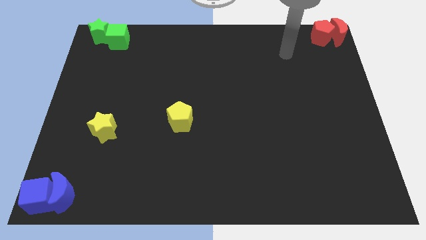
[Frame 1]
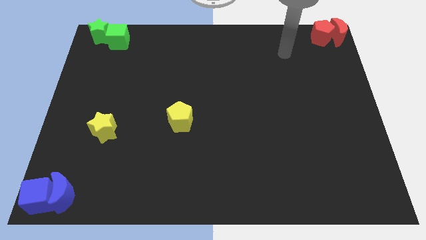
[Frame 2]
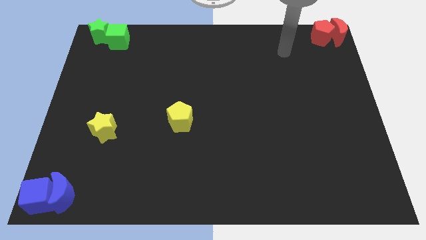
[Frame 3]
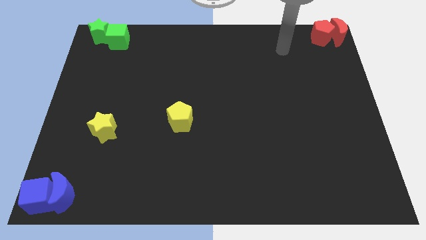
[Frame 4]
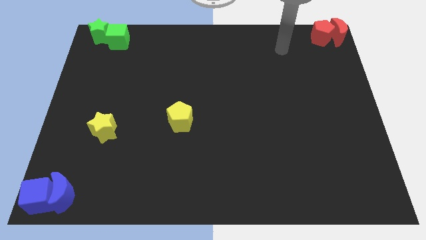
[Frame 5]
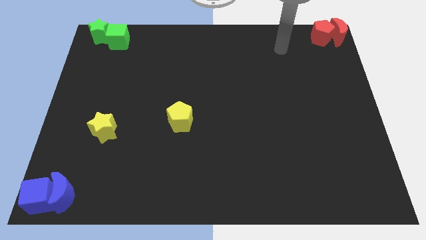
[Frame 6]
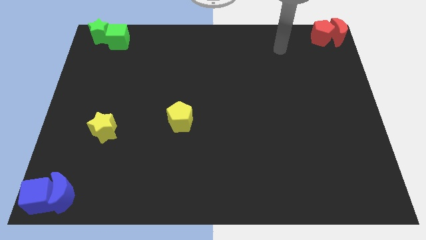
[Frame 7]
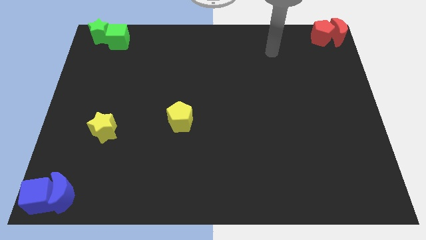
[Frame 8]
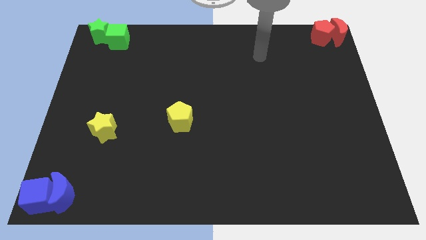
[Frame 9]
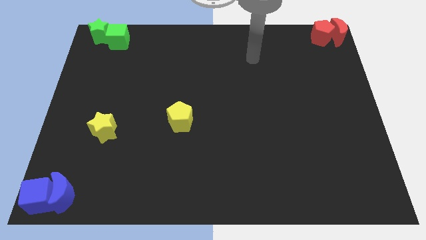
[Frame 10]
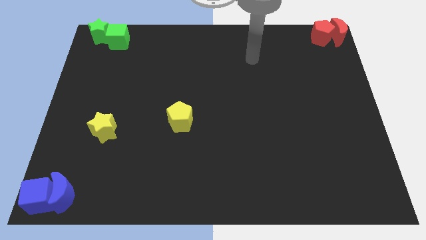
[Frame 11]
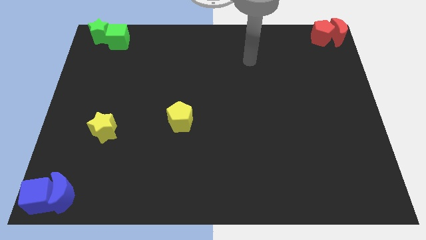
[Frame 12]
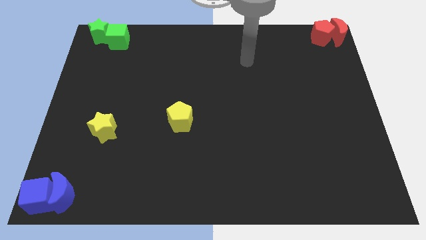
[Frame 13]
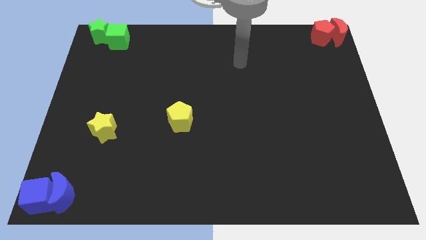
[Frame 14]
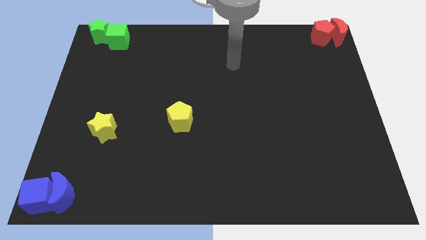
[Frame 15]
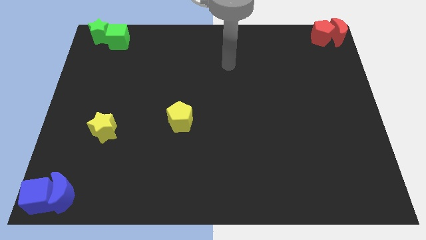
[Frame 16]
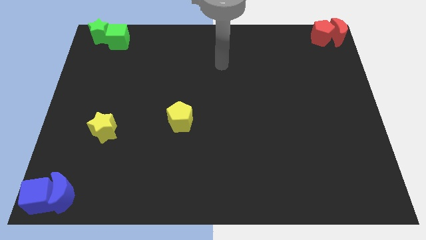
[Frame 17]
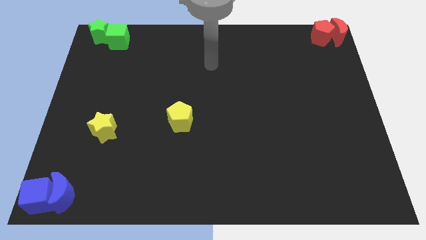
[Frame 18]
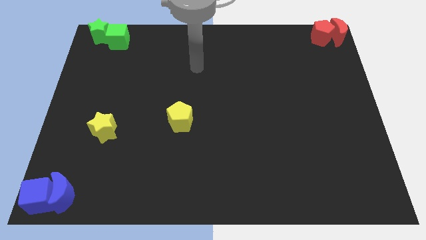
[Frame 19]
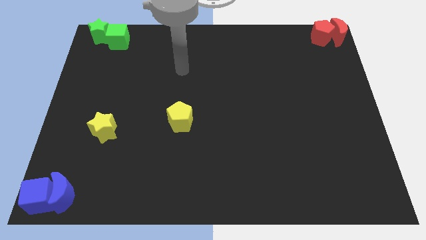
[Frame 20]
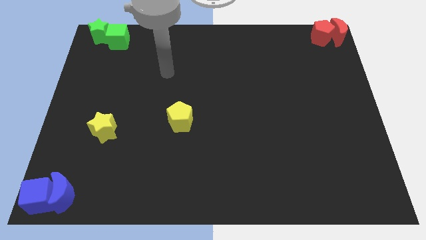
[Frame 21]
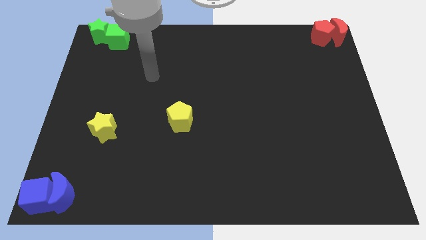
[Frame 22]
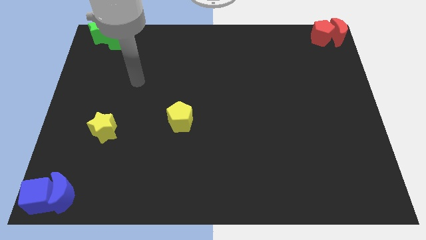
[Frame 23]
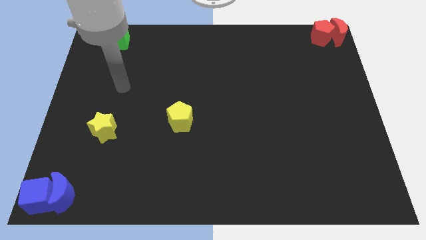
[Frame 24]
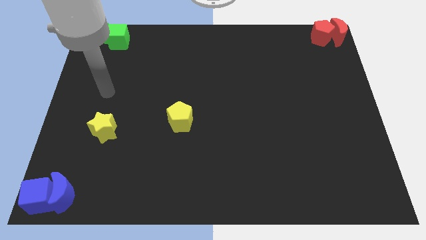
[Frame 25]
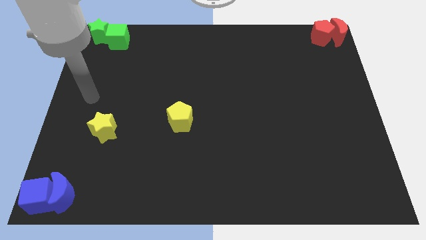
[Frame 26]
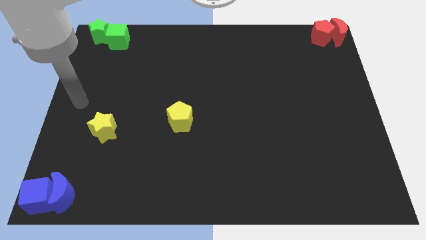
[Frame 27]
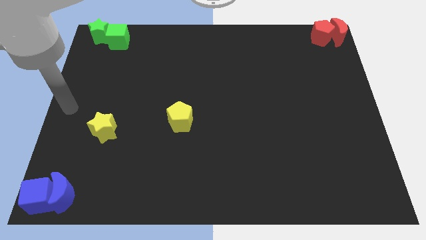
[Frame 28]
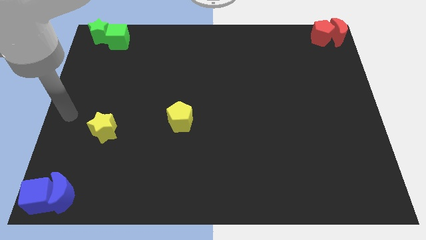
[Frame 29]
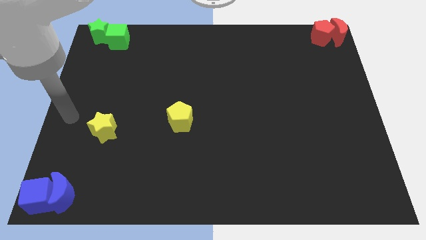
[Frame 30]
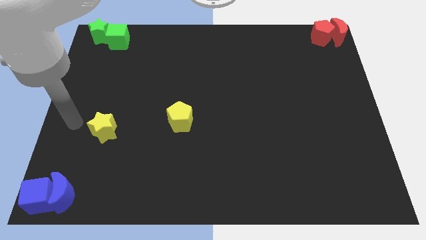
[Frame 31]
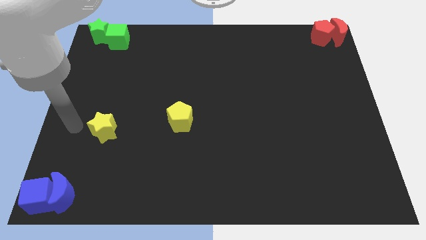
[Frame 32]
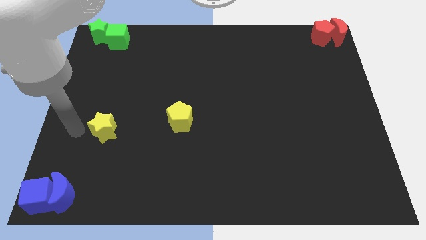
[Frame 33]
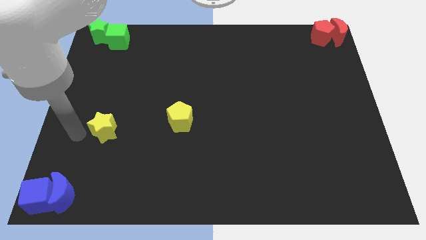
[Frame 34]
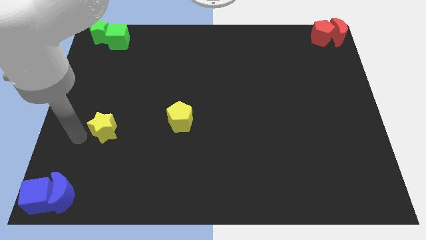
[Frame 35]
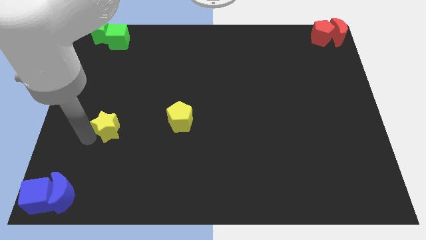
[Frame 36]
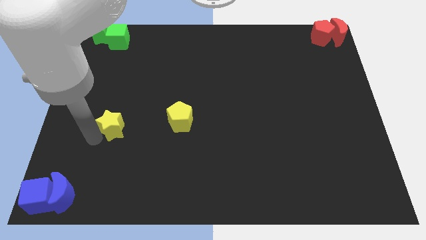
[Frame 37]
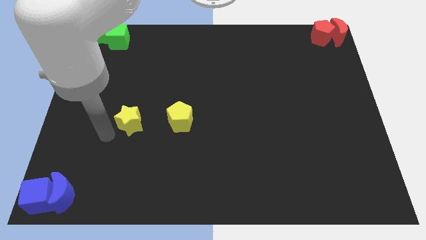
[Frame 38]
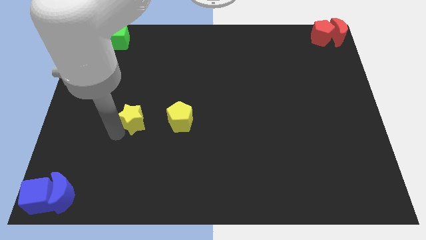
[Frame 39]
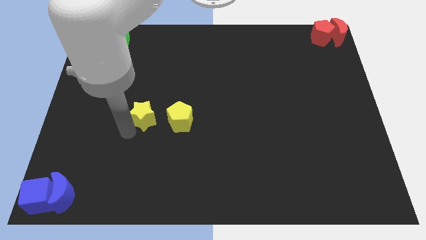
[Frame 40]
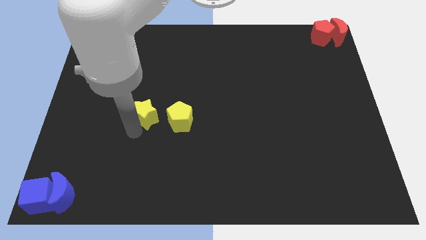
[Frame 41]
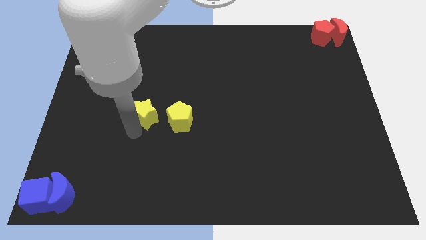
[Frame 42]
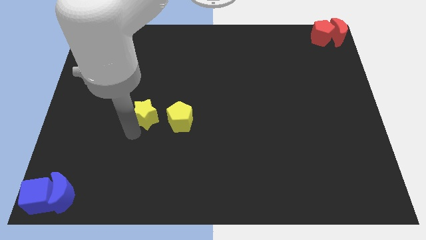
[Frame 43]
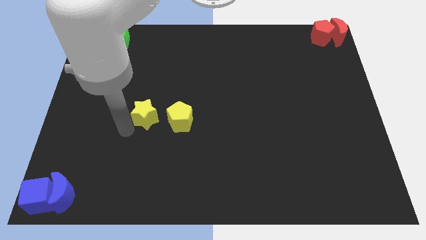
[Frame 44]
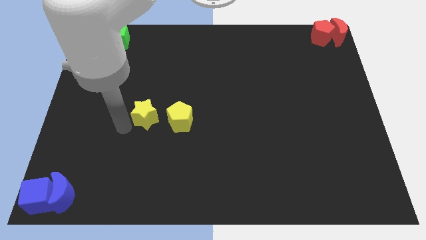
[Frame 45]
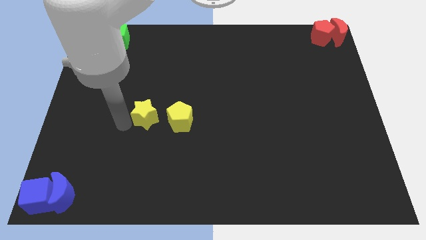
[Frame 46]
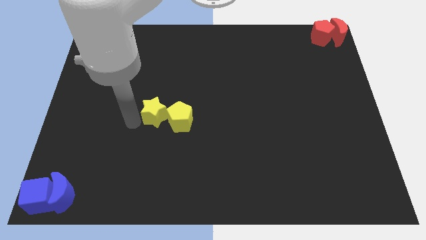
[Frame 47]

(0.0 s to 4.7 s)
move yellow star close to the yellow pentagon

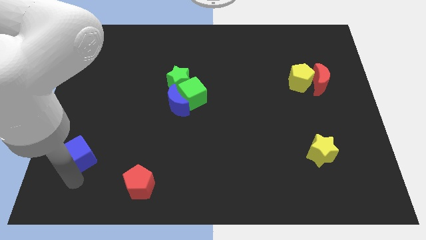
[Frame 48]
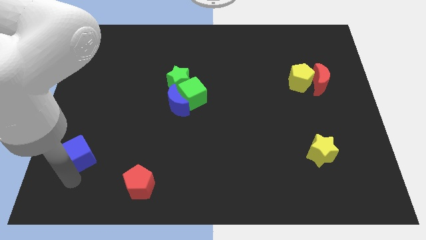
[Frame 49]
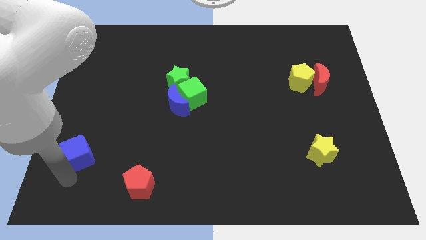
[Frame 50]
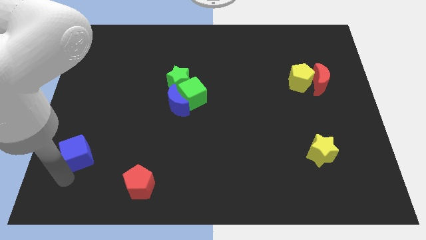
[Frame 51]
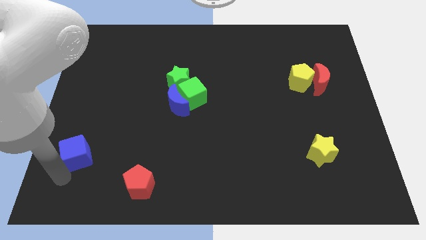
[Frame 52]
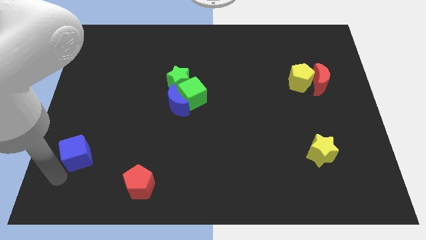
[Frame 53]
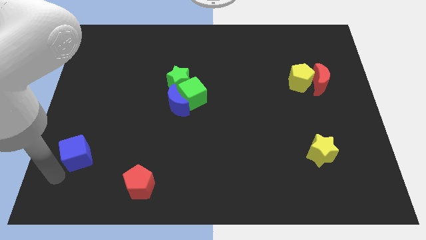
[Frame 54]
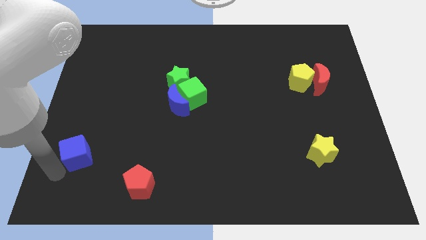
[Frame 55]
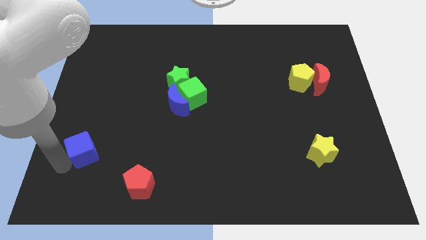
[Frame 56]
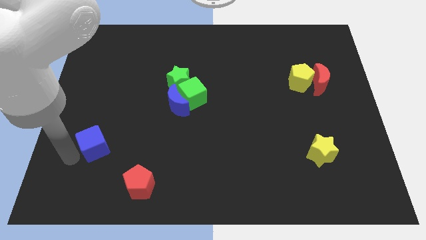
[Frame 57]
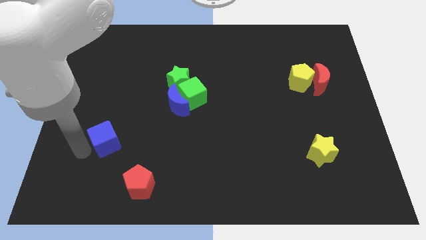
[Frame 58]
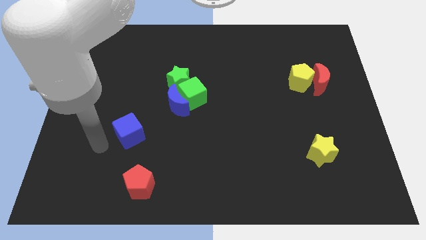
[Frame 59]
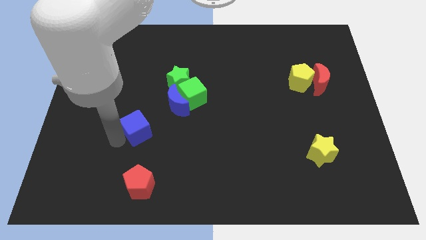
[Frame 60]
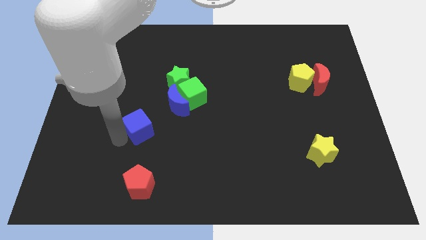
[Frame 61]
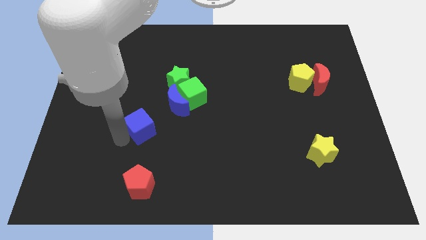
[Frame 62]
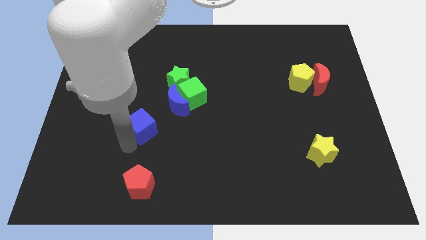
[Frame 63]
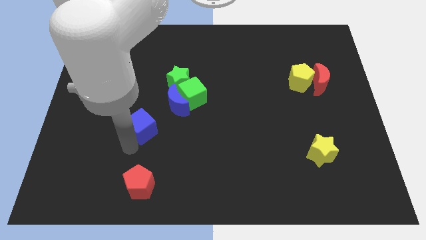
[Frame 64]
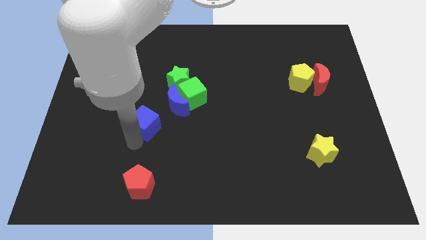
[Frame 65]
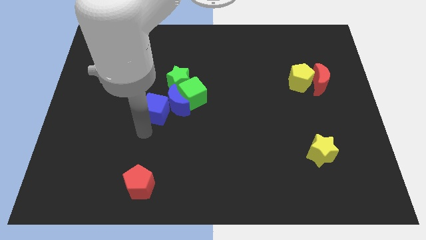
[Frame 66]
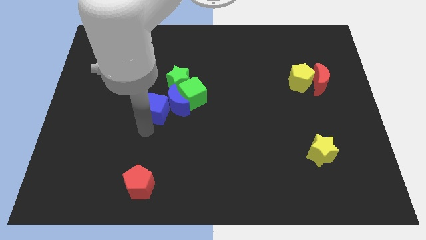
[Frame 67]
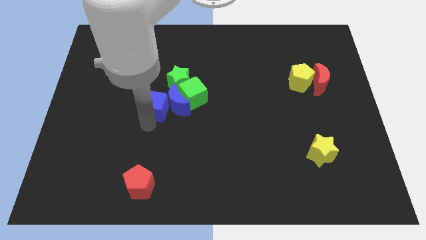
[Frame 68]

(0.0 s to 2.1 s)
push the blue cube into blue crescent

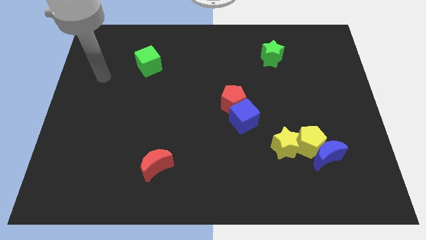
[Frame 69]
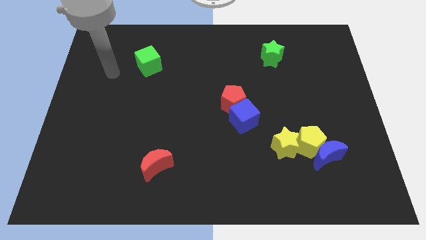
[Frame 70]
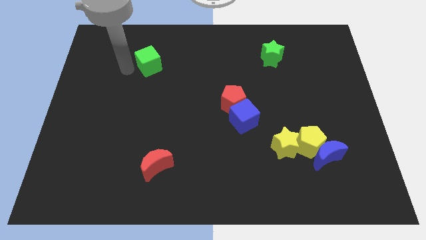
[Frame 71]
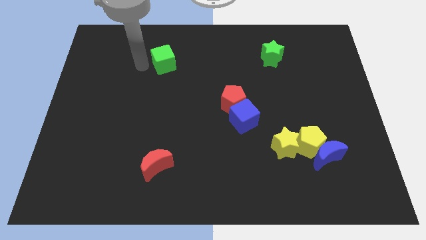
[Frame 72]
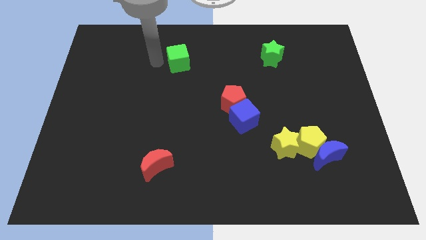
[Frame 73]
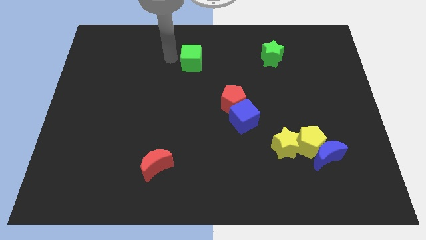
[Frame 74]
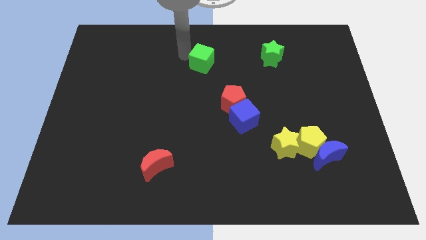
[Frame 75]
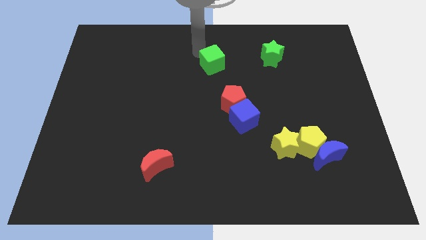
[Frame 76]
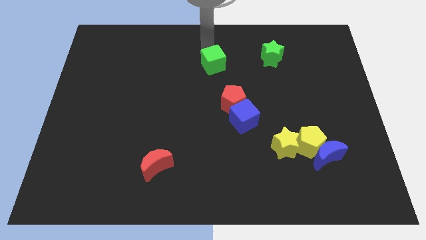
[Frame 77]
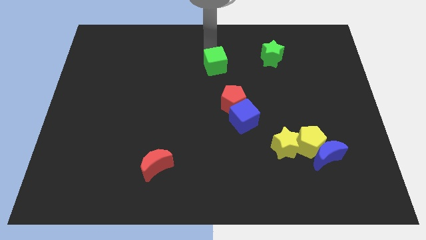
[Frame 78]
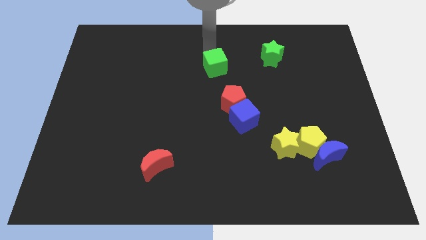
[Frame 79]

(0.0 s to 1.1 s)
push the green cube to the top left of the red pentagon

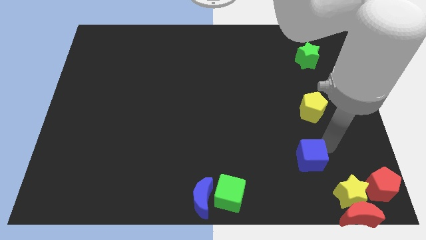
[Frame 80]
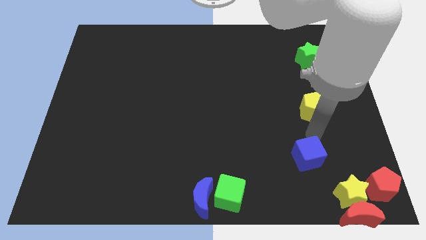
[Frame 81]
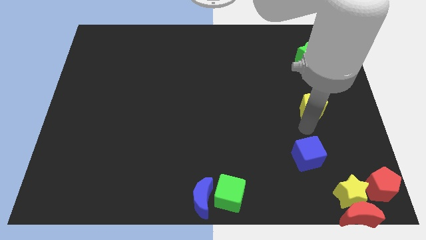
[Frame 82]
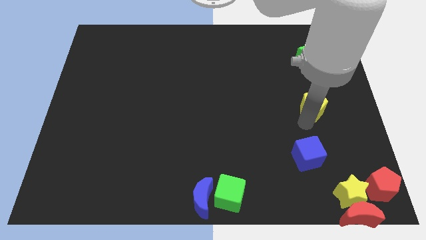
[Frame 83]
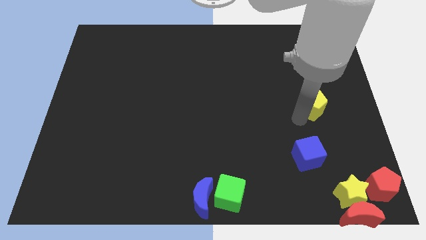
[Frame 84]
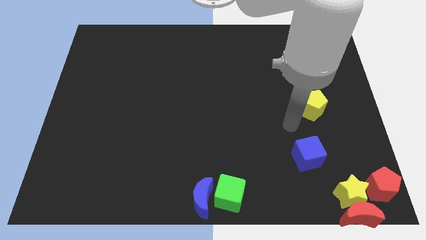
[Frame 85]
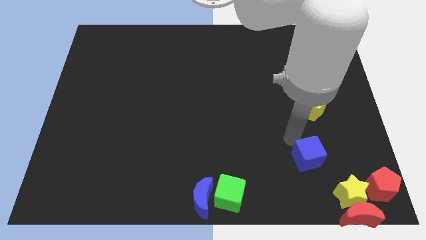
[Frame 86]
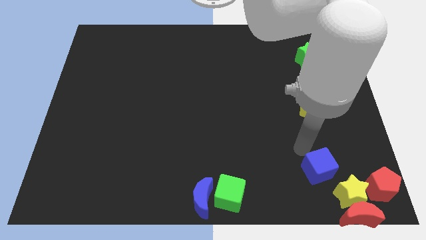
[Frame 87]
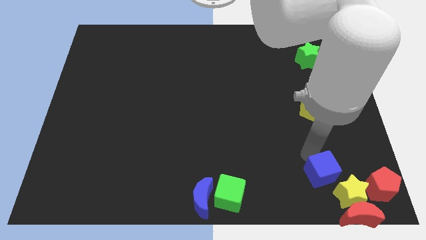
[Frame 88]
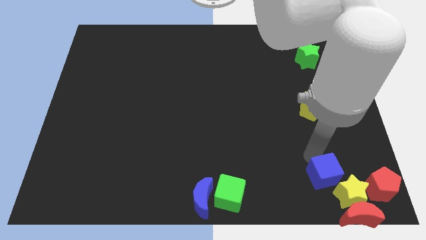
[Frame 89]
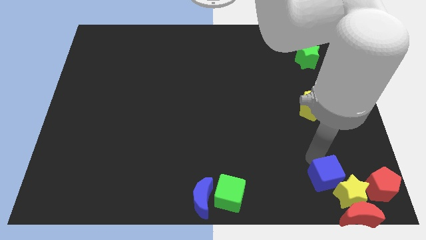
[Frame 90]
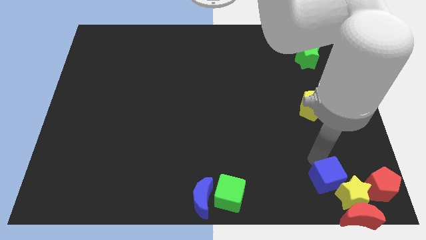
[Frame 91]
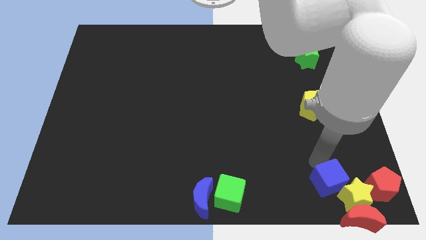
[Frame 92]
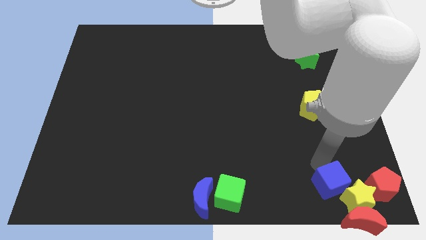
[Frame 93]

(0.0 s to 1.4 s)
push the blue cube into the group of blocks
